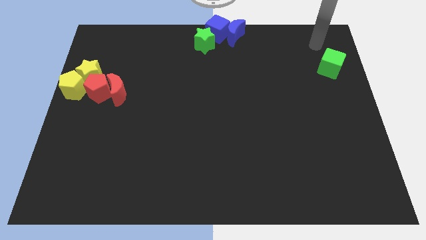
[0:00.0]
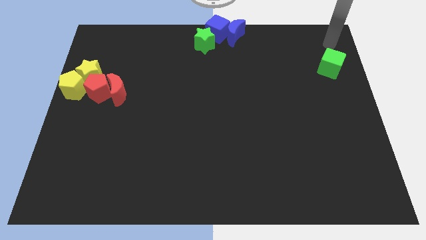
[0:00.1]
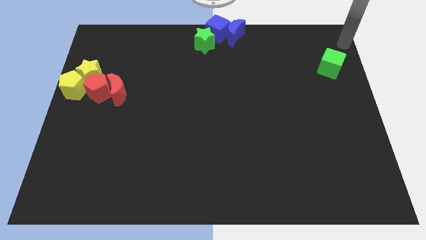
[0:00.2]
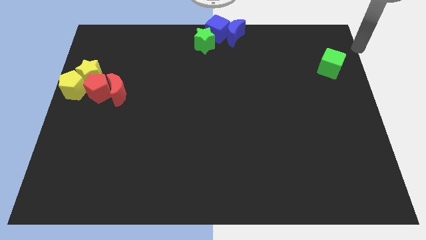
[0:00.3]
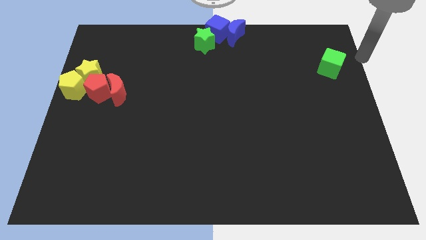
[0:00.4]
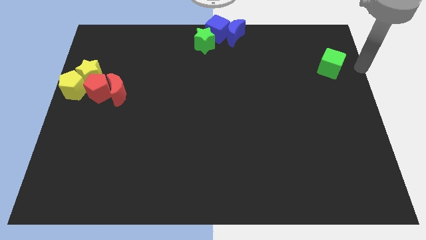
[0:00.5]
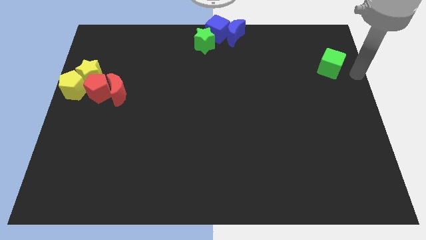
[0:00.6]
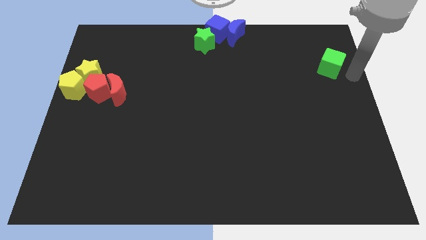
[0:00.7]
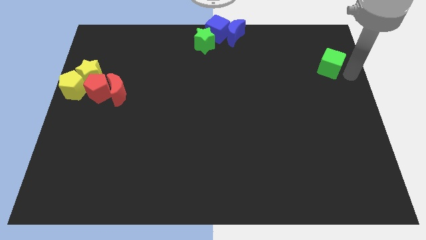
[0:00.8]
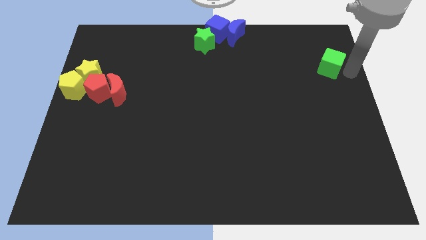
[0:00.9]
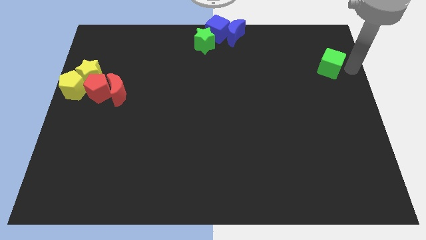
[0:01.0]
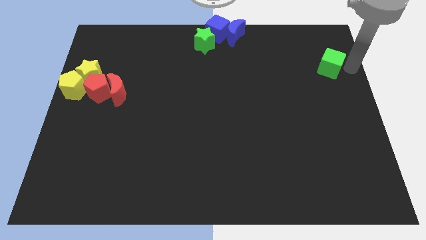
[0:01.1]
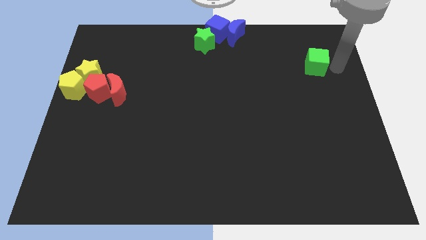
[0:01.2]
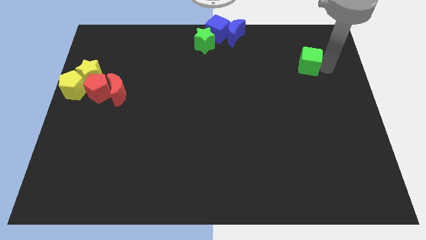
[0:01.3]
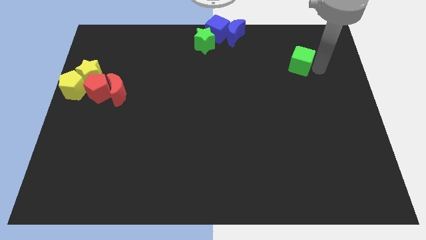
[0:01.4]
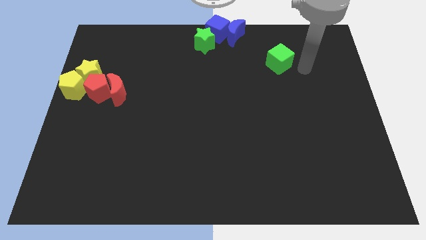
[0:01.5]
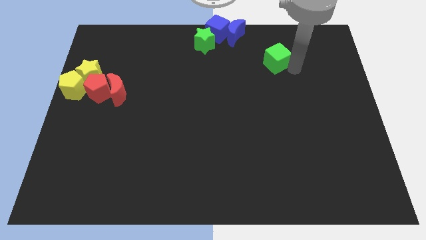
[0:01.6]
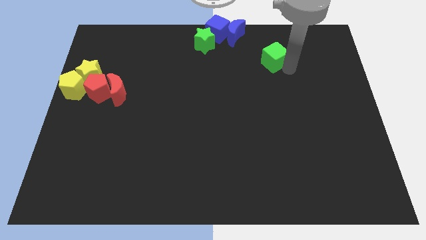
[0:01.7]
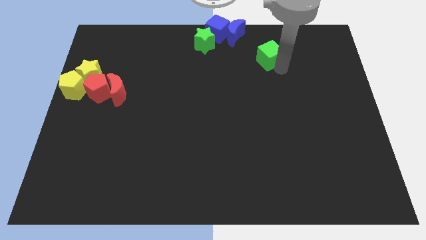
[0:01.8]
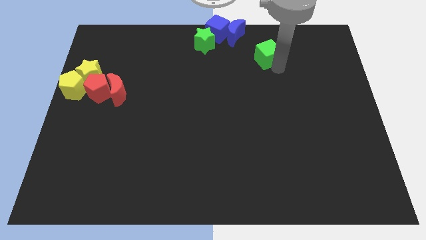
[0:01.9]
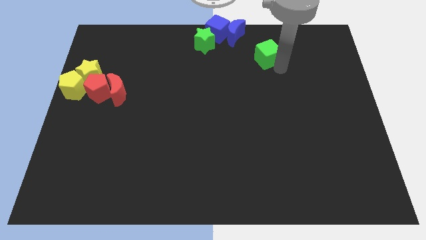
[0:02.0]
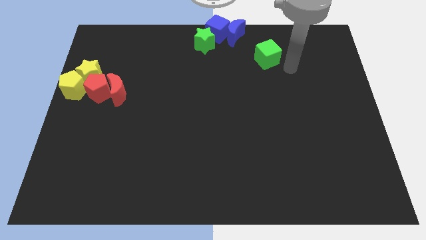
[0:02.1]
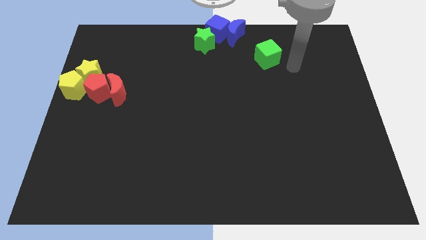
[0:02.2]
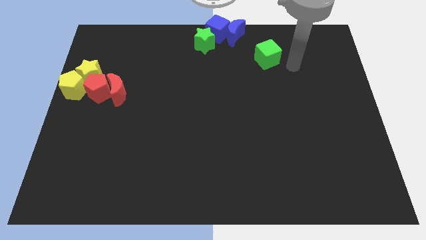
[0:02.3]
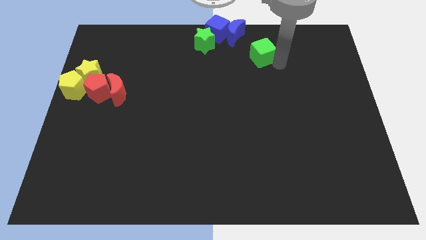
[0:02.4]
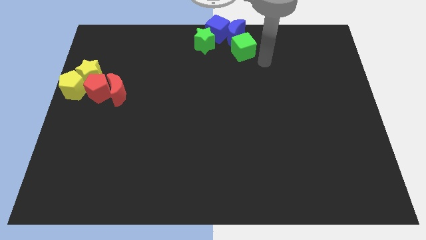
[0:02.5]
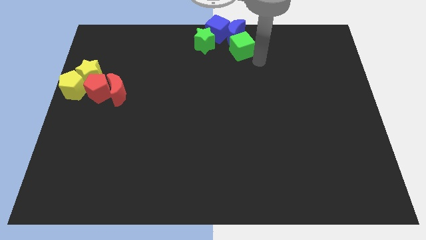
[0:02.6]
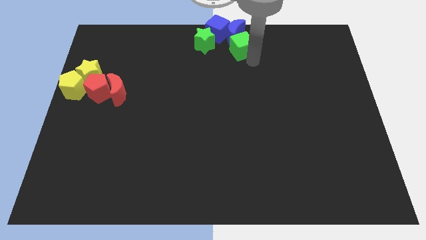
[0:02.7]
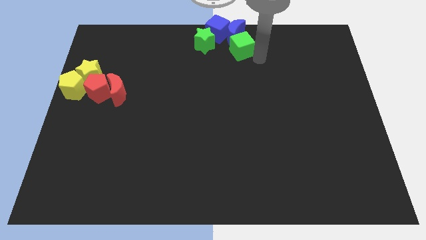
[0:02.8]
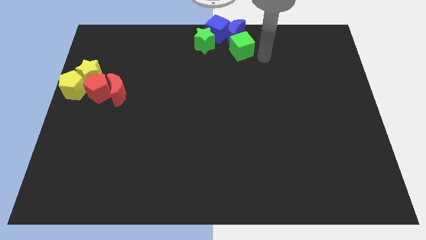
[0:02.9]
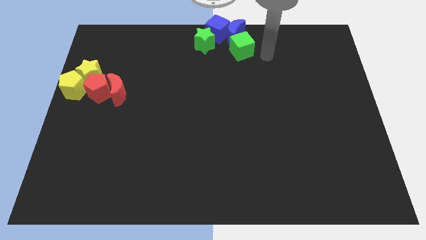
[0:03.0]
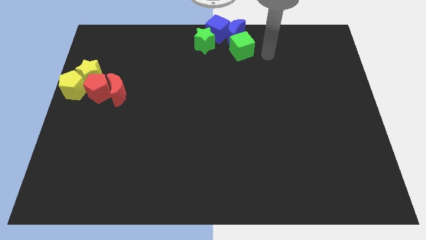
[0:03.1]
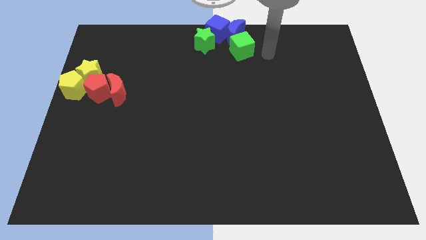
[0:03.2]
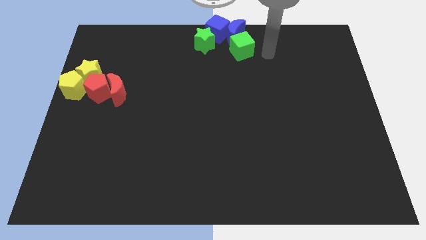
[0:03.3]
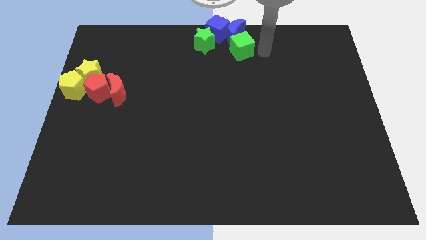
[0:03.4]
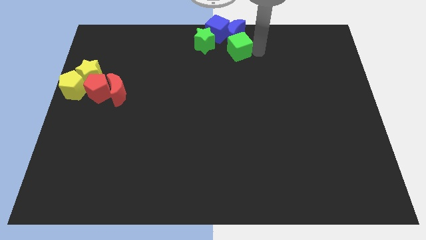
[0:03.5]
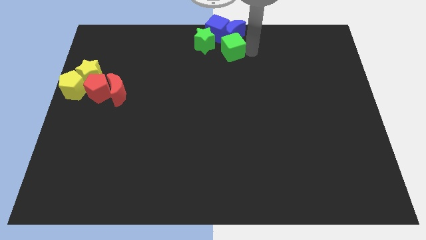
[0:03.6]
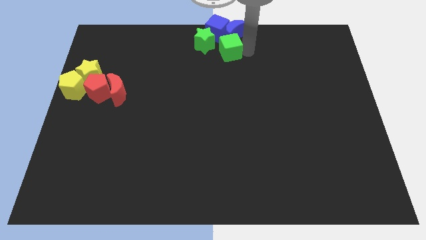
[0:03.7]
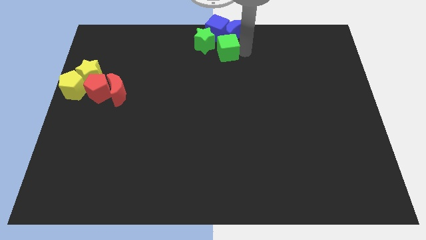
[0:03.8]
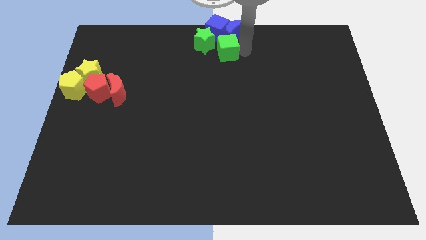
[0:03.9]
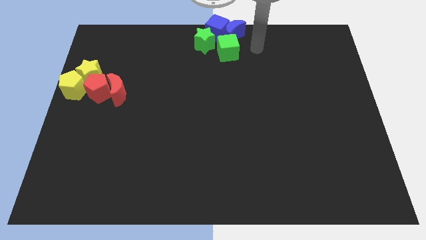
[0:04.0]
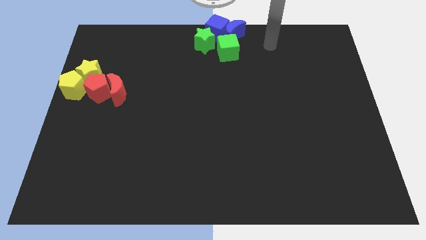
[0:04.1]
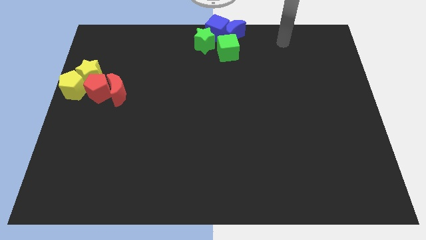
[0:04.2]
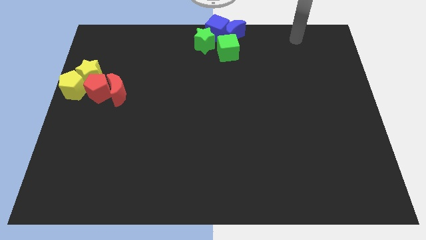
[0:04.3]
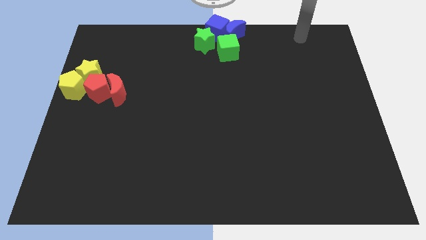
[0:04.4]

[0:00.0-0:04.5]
place green cube to the bottom side of the blue crescent

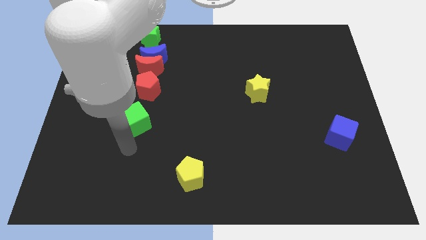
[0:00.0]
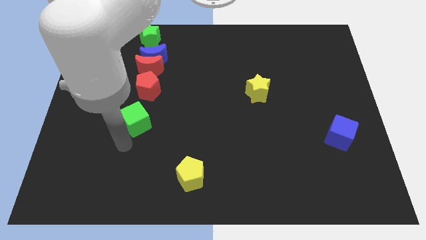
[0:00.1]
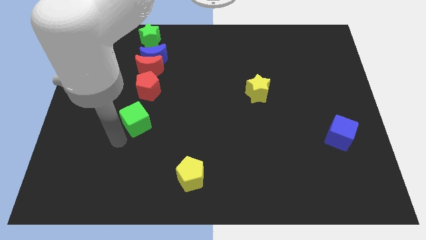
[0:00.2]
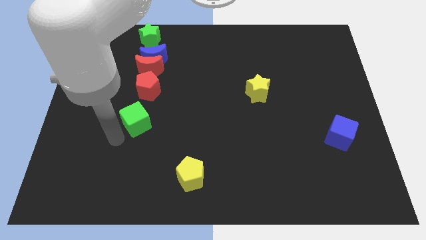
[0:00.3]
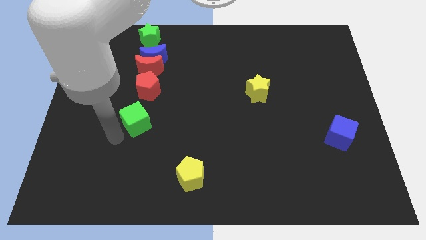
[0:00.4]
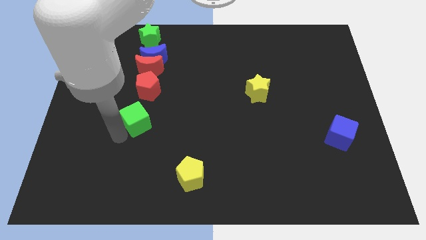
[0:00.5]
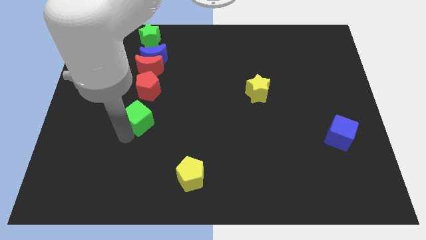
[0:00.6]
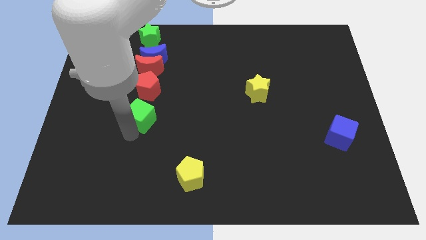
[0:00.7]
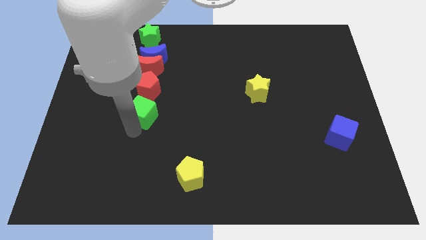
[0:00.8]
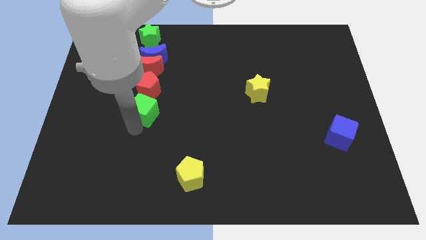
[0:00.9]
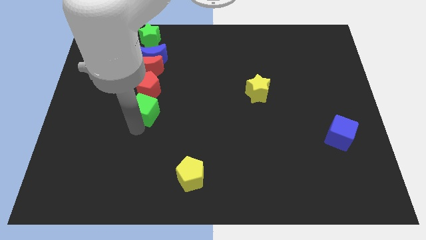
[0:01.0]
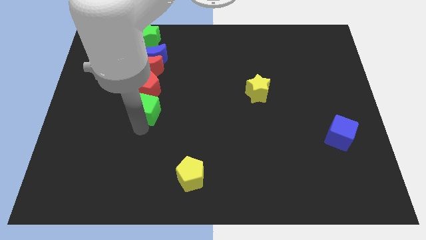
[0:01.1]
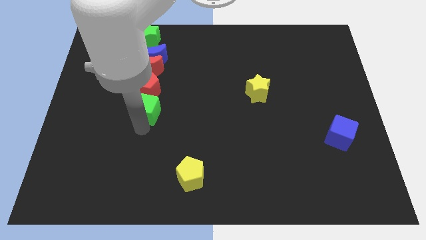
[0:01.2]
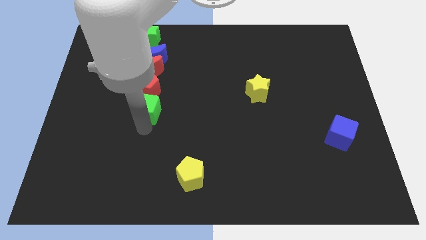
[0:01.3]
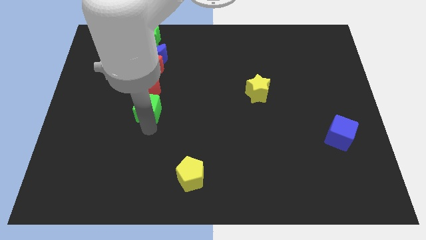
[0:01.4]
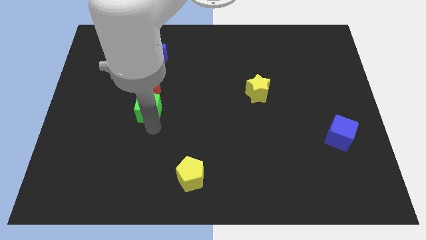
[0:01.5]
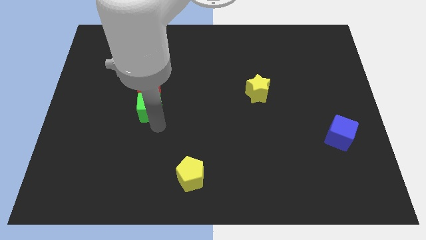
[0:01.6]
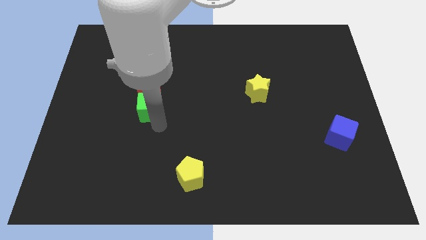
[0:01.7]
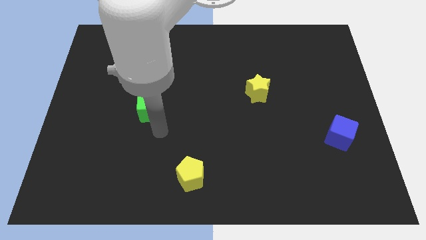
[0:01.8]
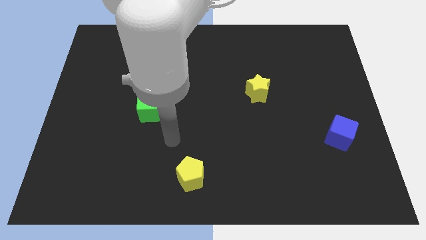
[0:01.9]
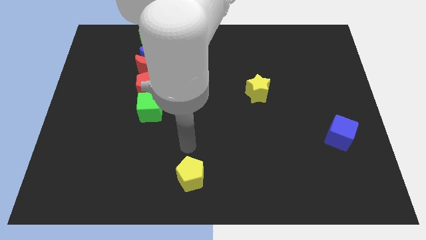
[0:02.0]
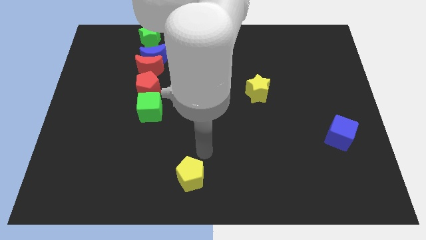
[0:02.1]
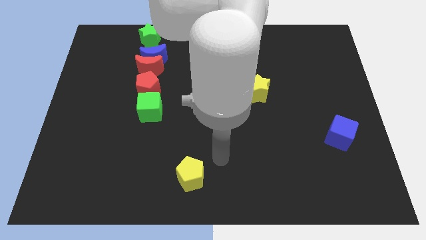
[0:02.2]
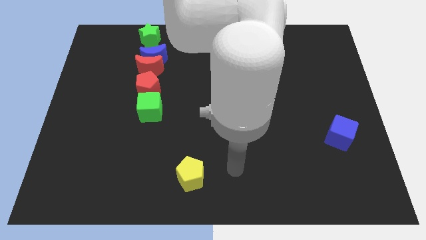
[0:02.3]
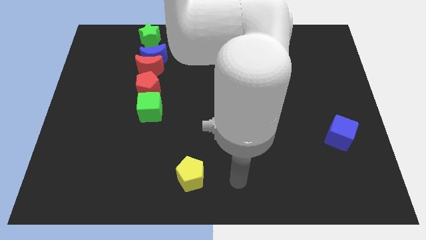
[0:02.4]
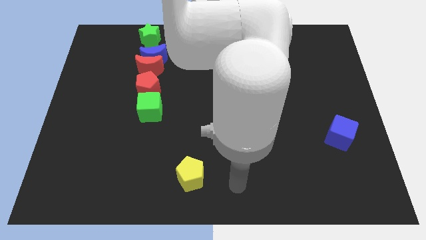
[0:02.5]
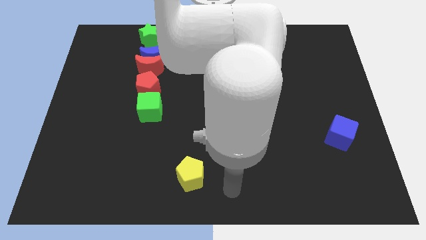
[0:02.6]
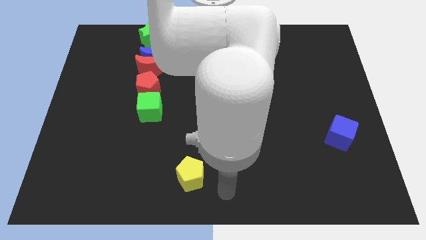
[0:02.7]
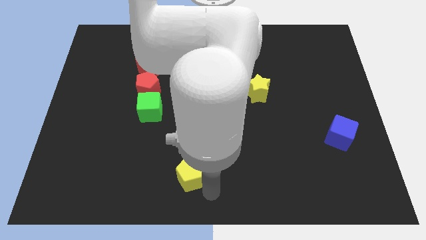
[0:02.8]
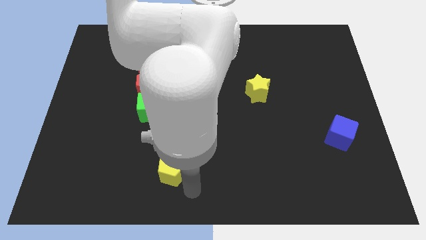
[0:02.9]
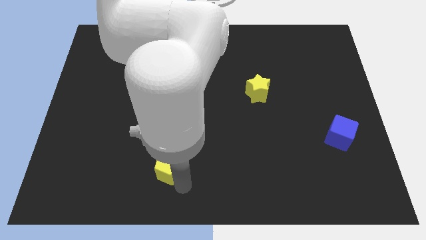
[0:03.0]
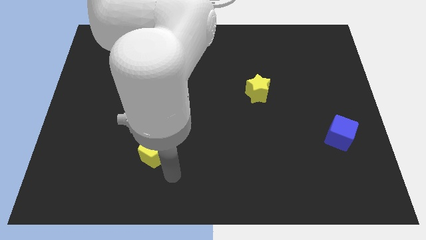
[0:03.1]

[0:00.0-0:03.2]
slide the green cube close to the red pentagon

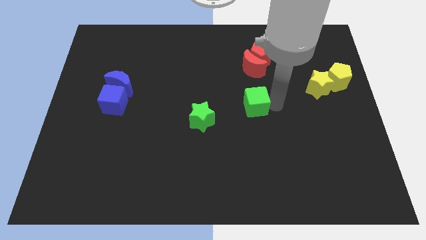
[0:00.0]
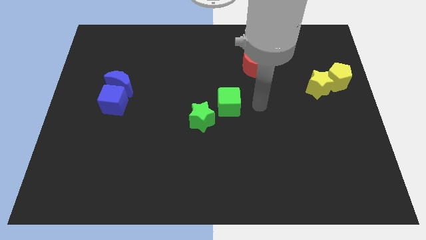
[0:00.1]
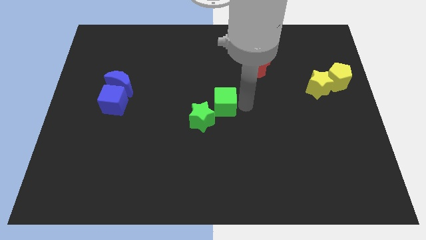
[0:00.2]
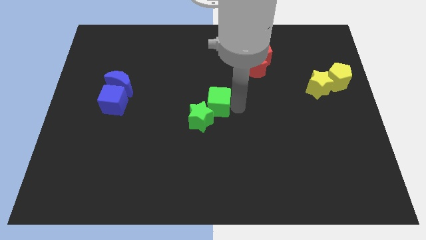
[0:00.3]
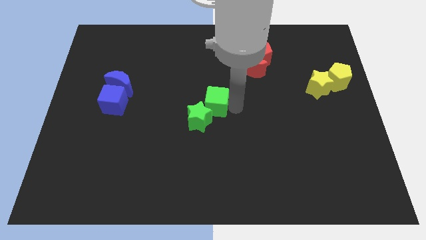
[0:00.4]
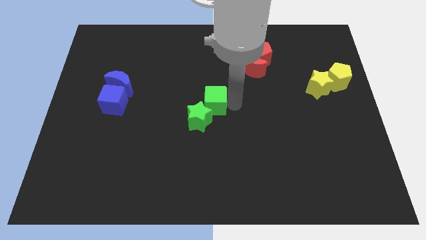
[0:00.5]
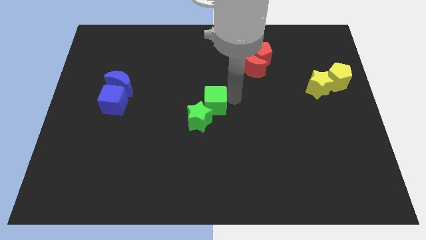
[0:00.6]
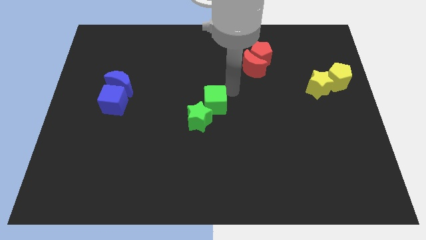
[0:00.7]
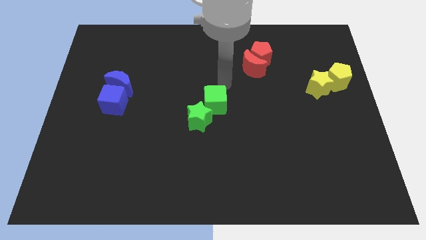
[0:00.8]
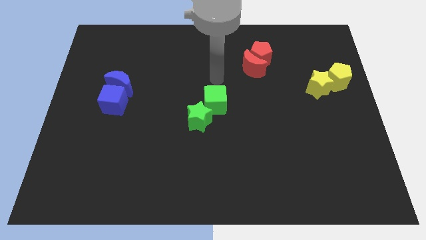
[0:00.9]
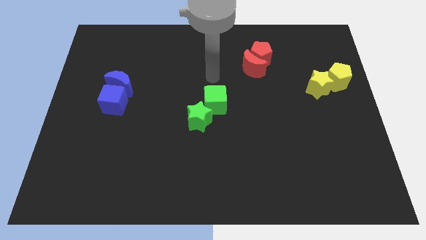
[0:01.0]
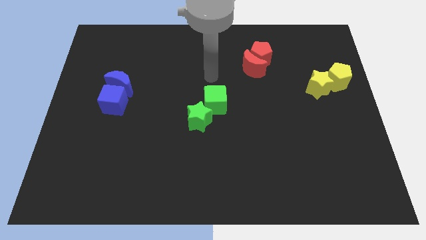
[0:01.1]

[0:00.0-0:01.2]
place green cube near to green star
